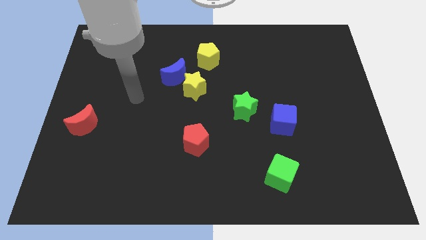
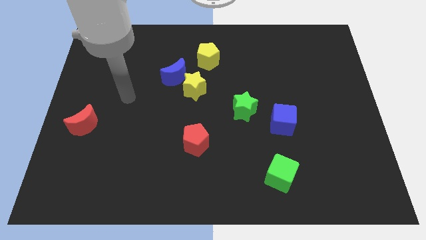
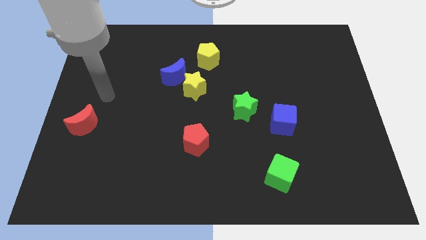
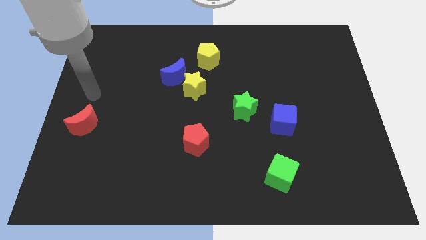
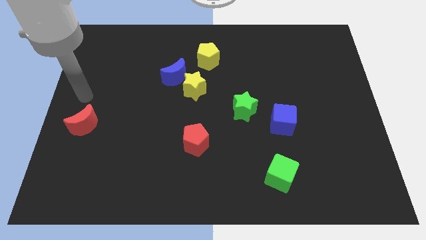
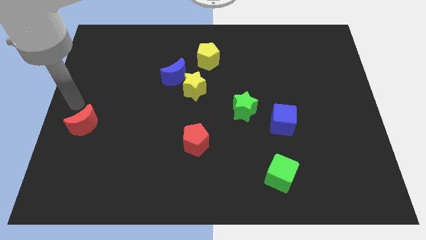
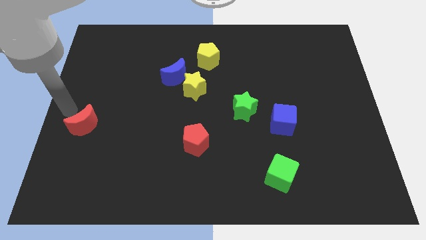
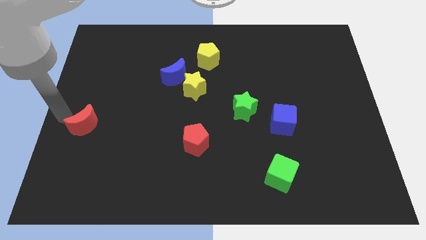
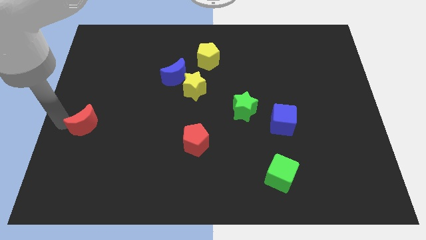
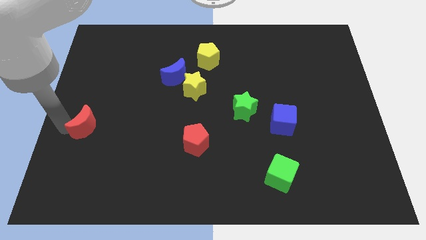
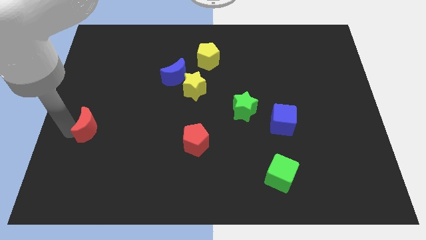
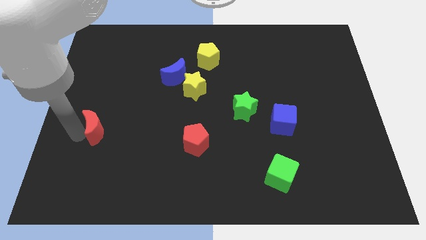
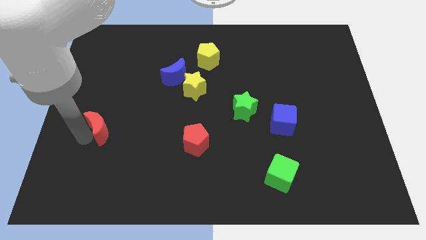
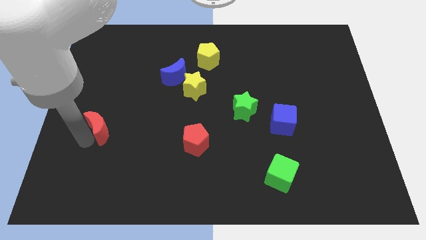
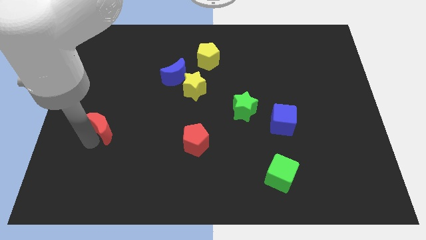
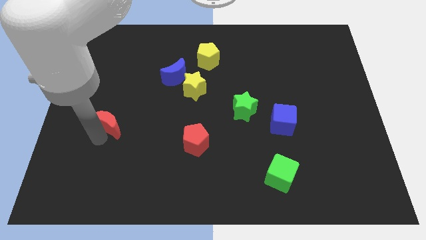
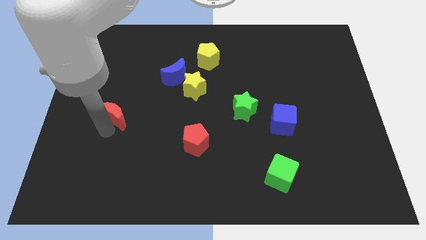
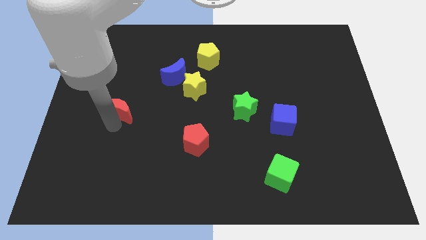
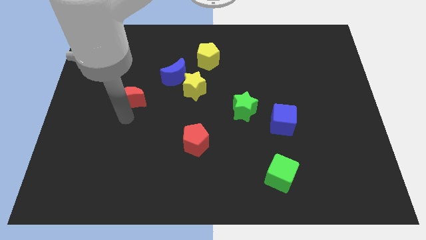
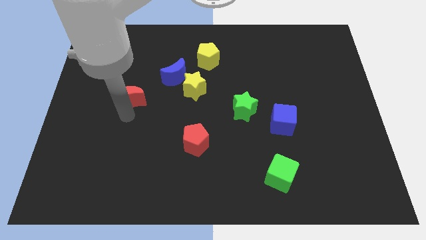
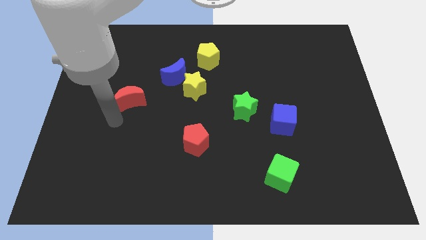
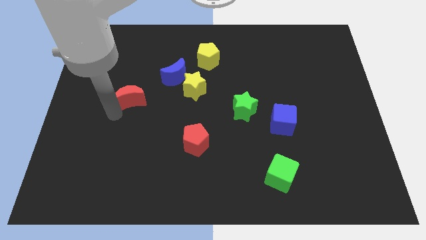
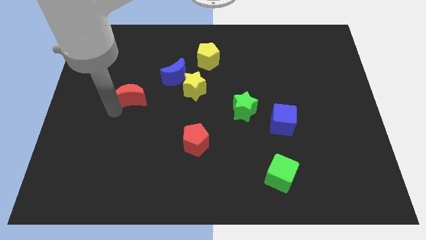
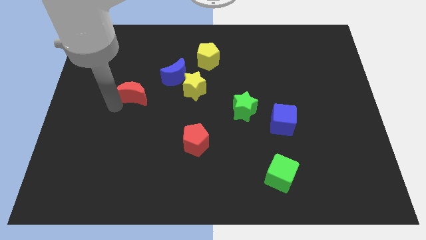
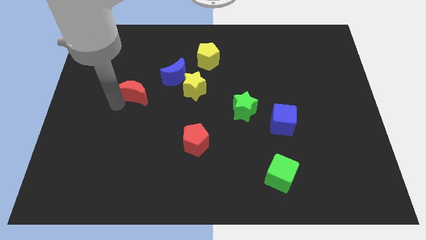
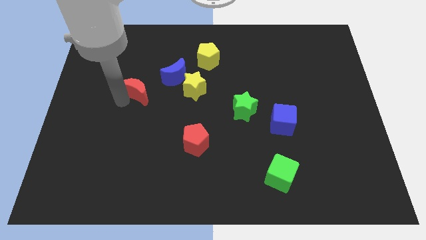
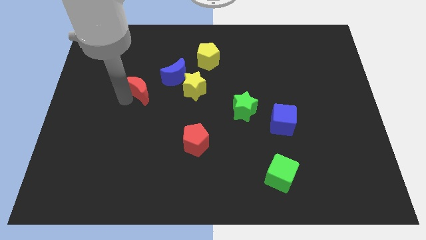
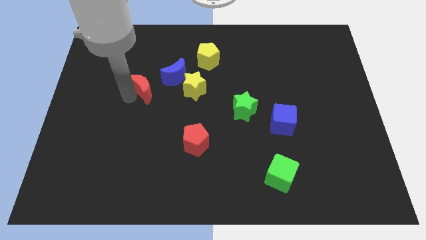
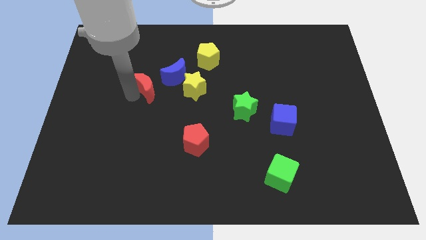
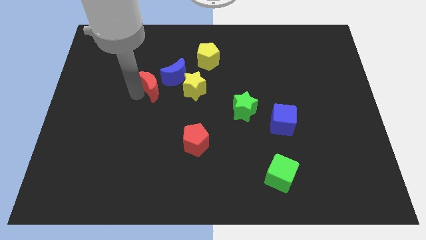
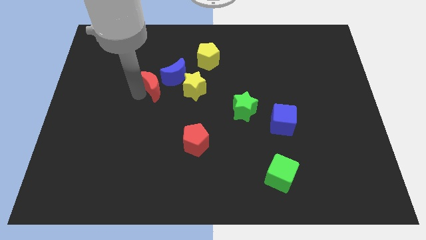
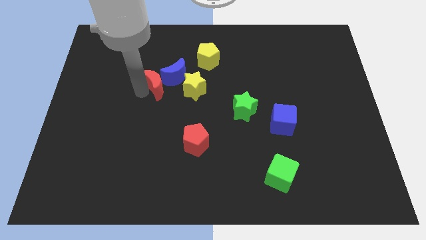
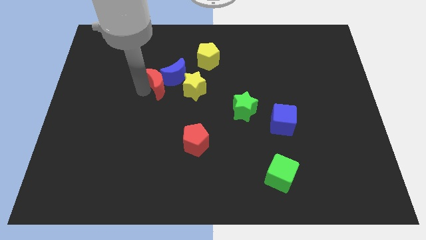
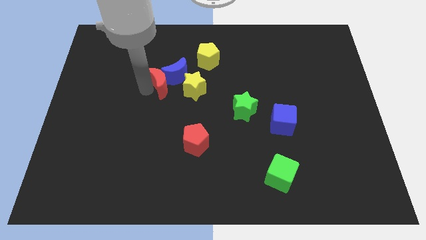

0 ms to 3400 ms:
put the red moon towards the blue moon

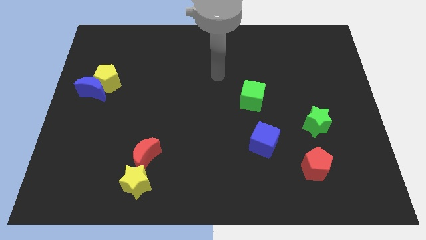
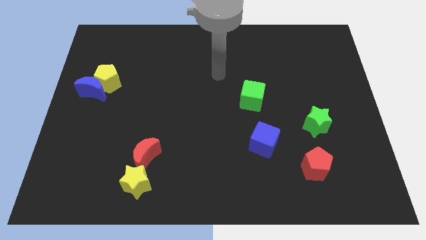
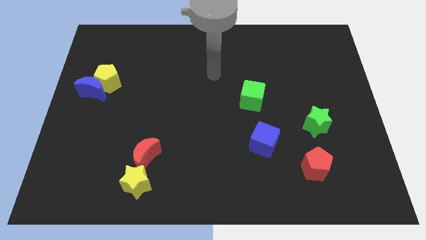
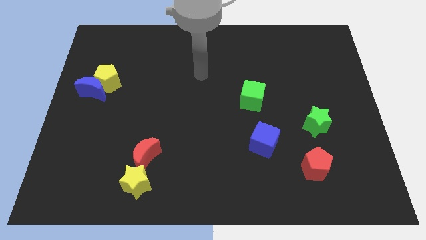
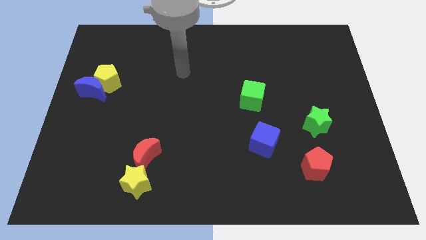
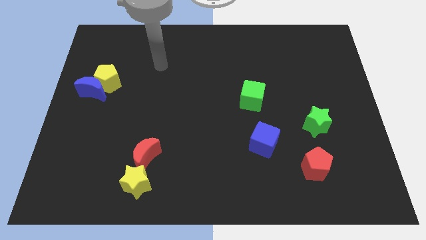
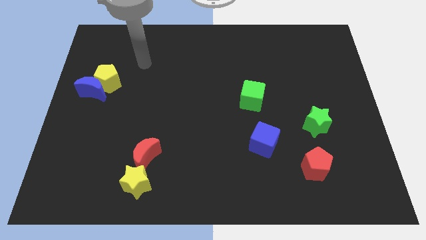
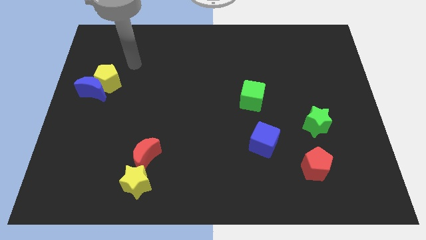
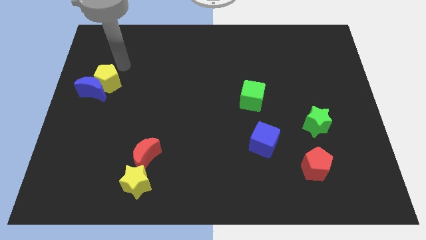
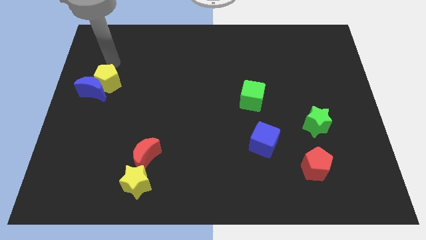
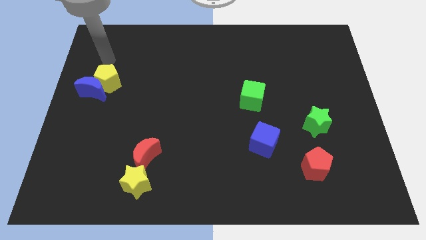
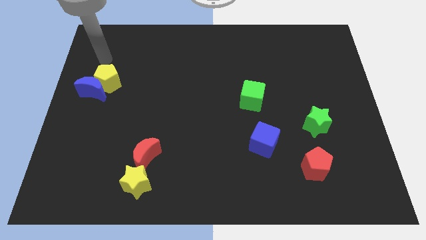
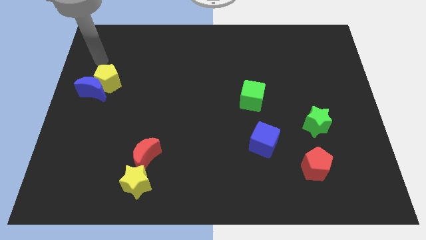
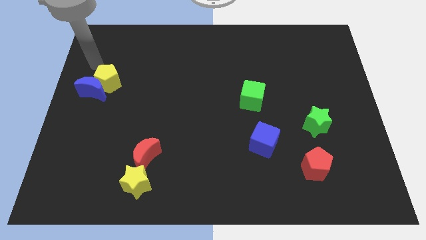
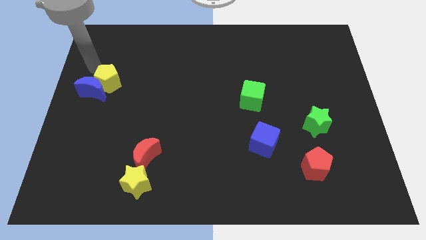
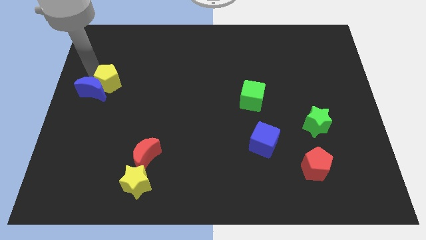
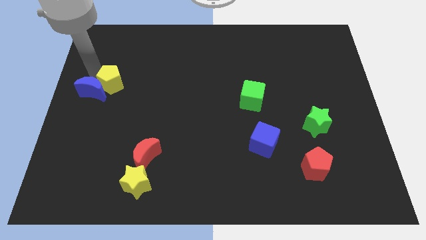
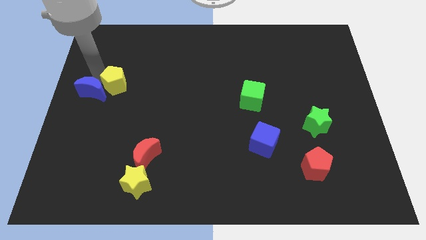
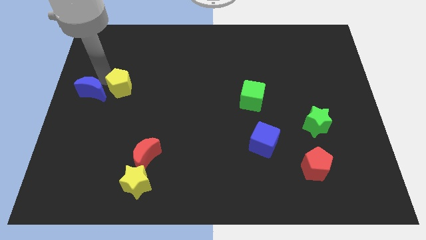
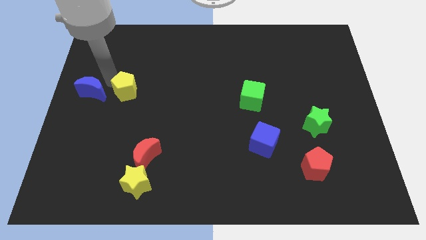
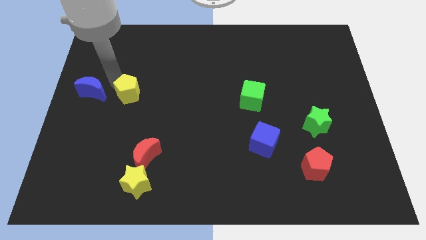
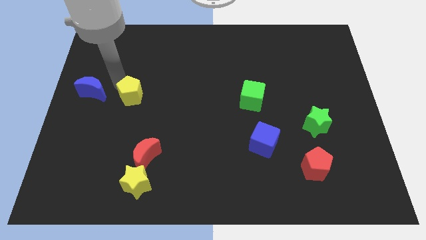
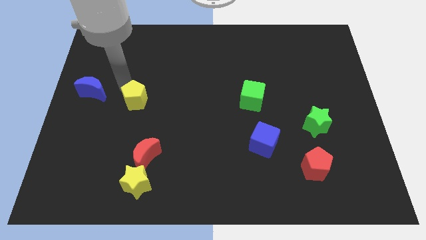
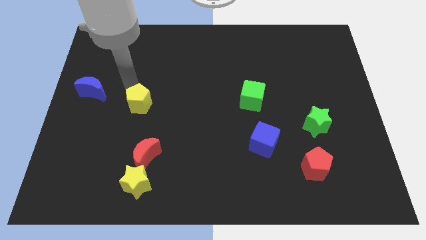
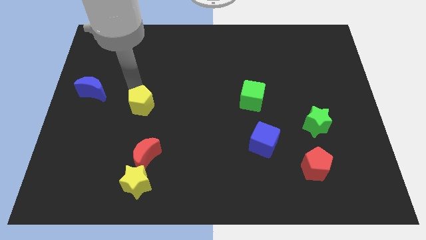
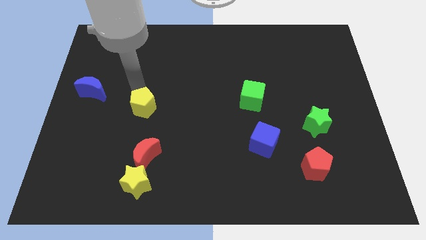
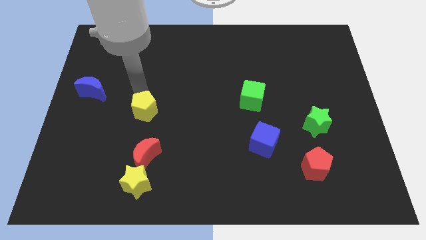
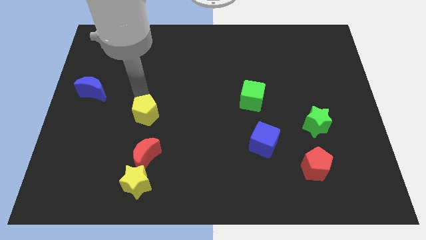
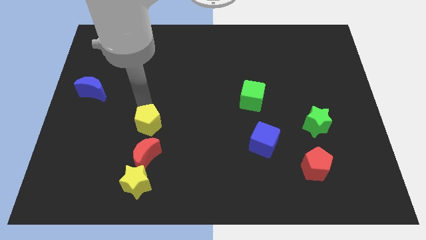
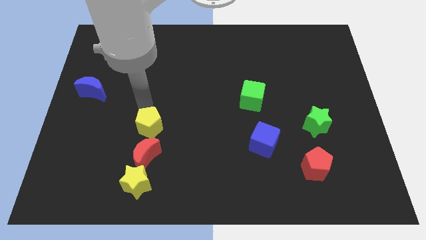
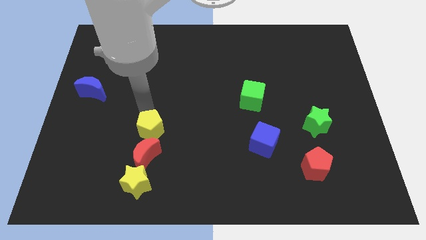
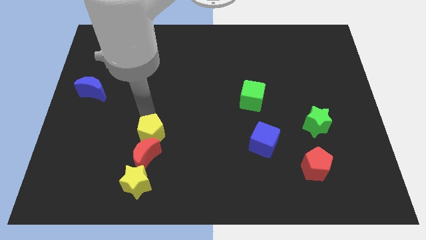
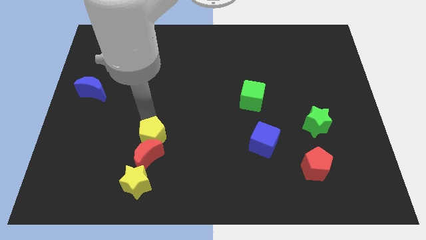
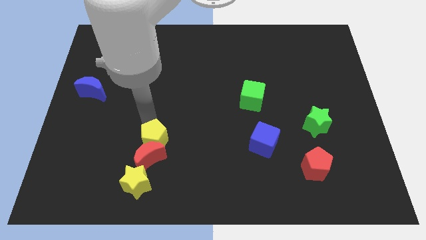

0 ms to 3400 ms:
slide the yellow pentagon towards the red moon

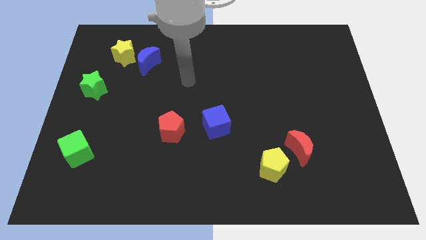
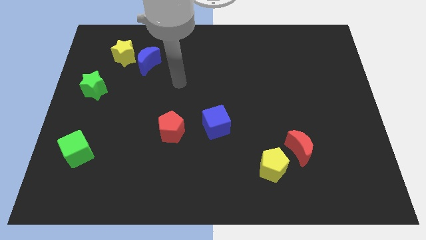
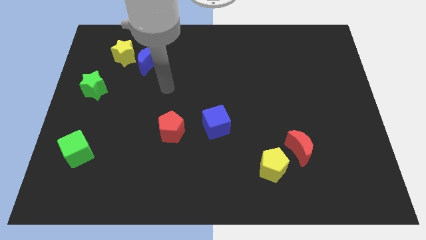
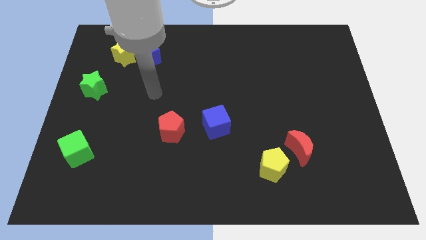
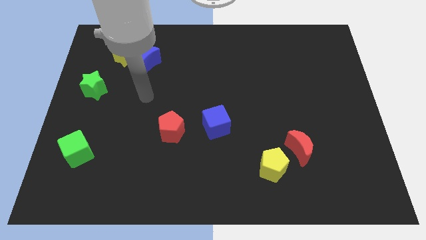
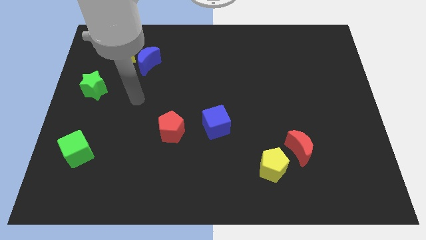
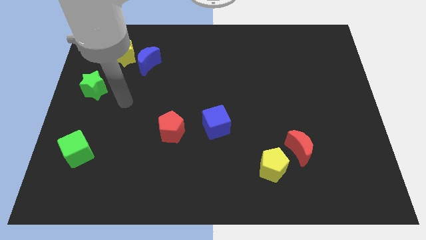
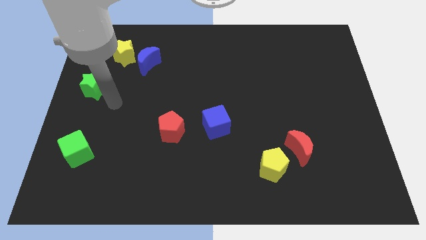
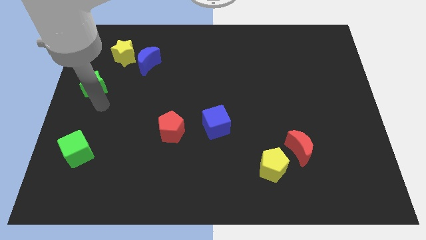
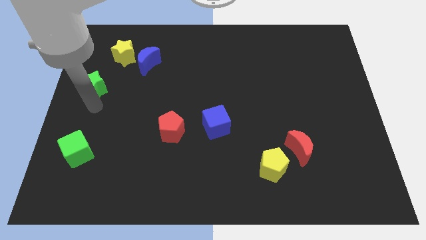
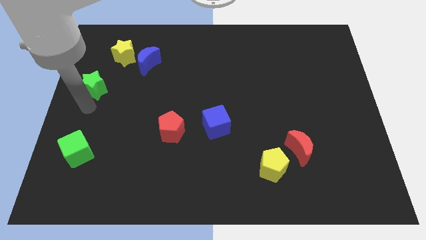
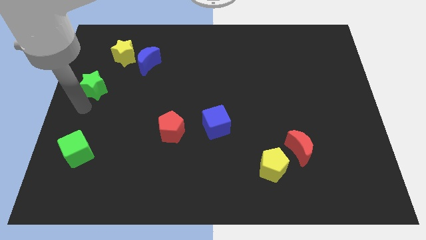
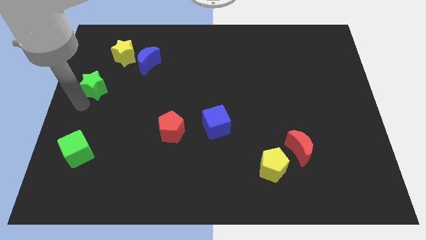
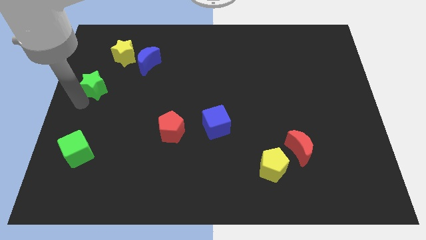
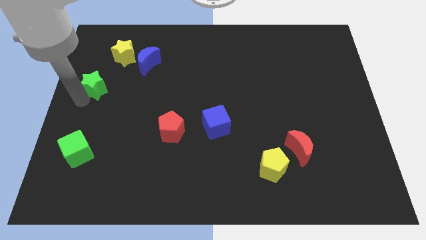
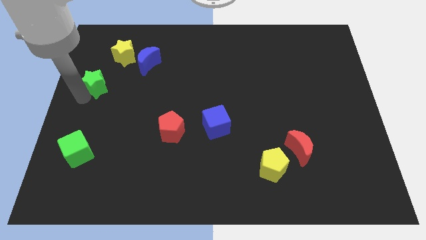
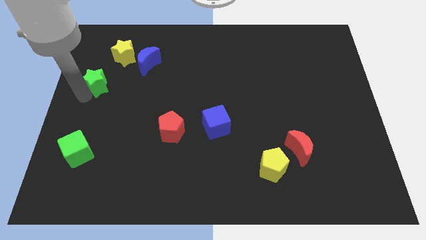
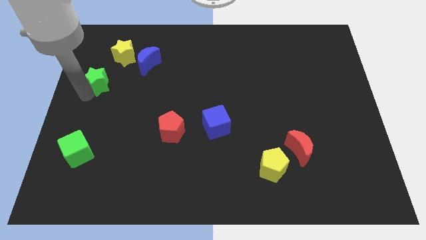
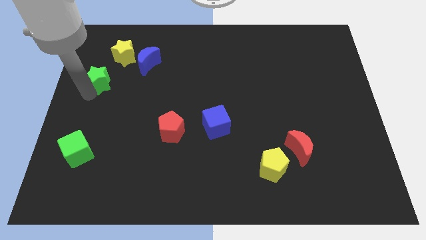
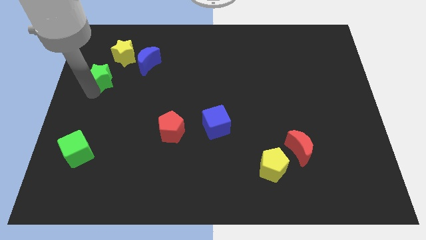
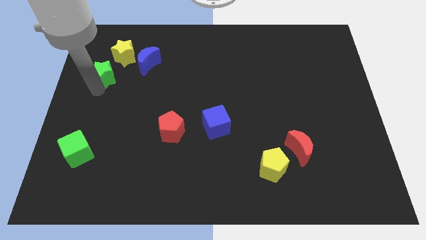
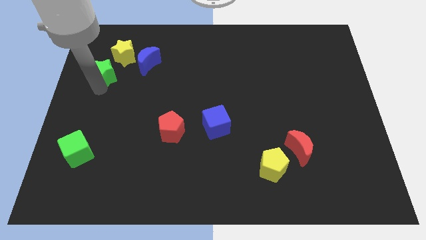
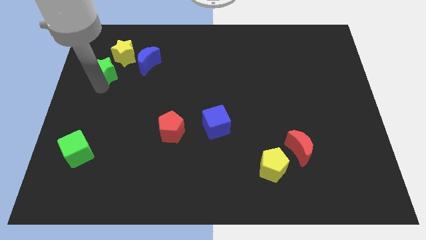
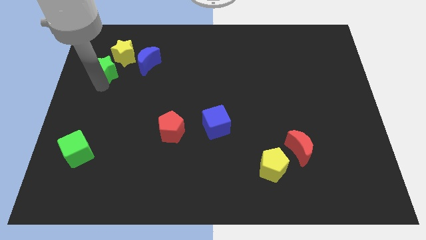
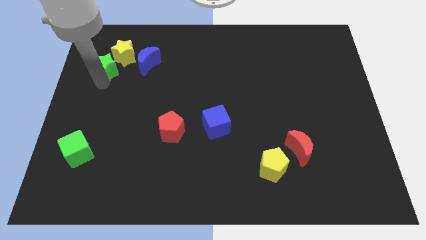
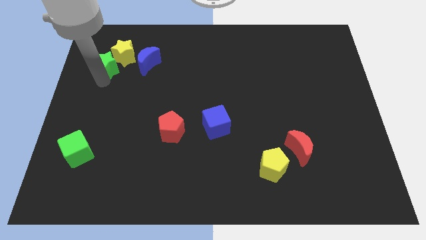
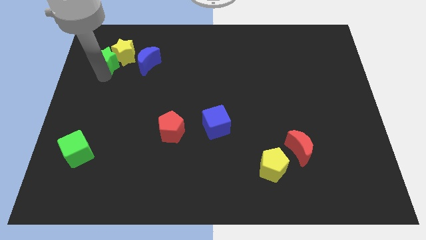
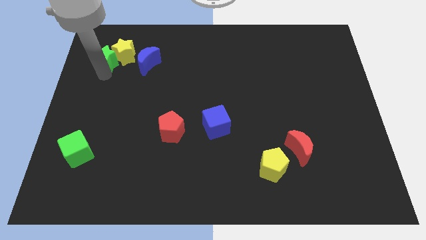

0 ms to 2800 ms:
push the green star next to the yellow star
